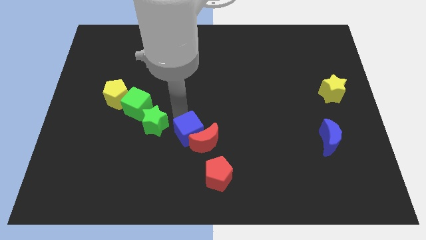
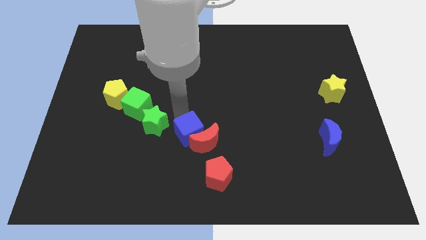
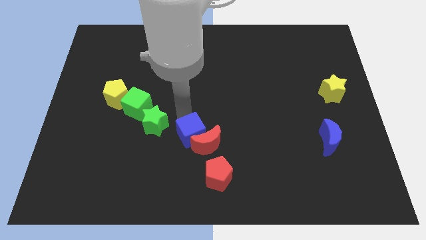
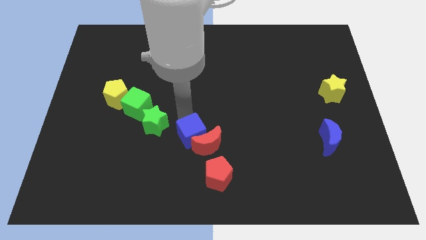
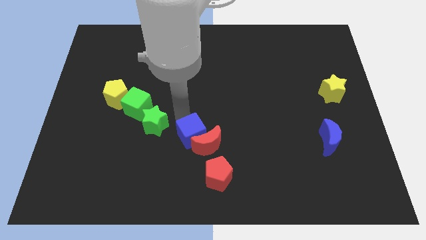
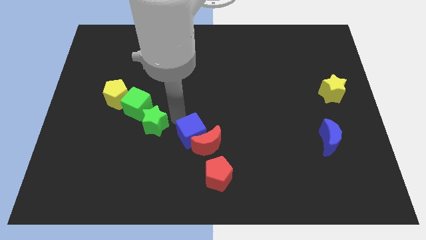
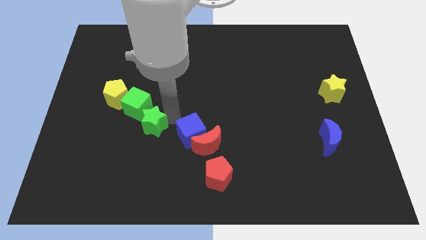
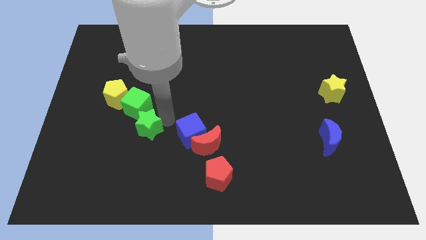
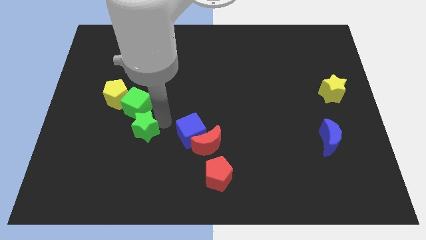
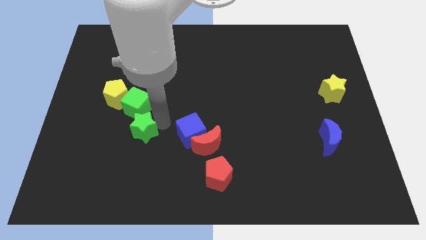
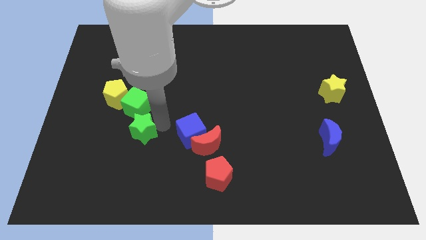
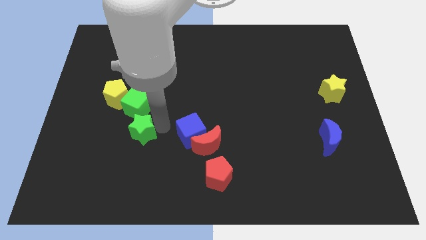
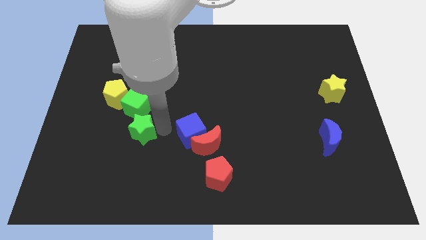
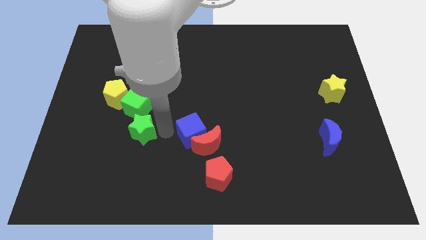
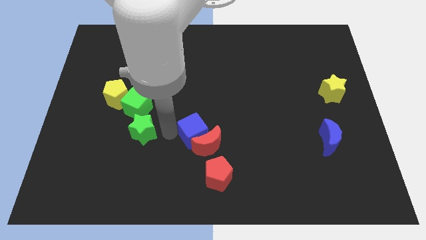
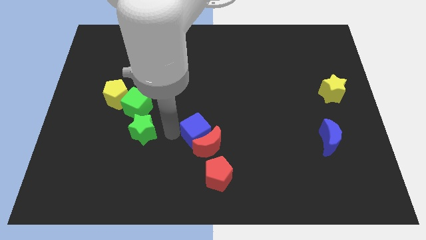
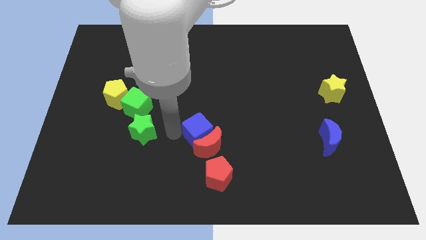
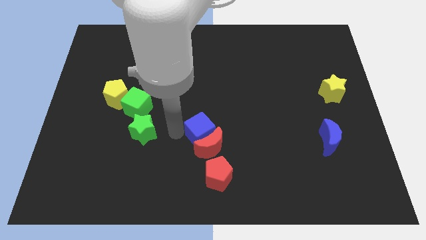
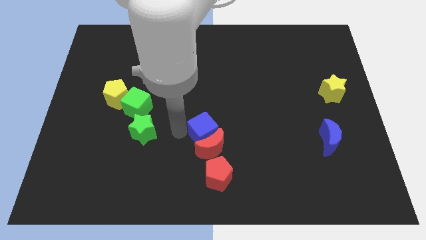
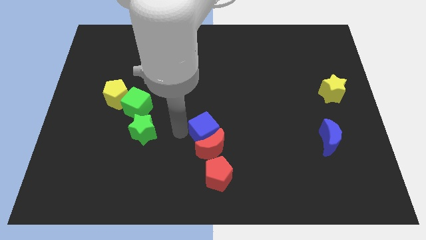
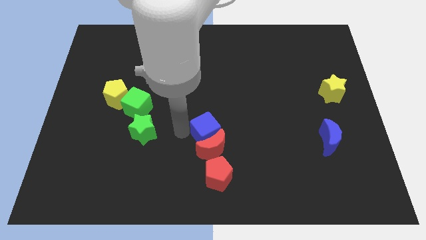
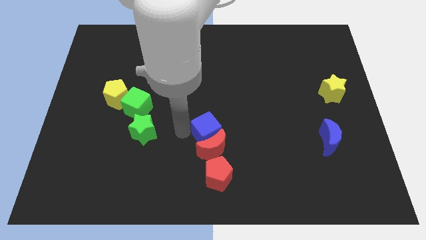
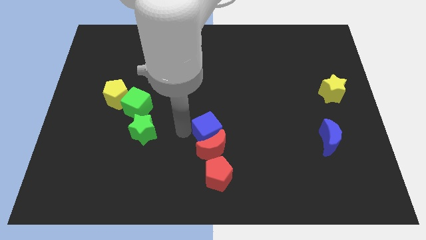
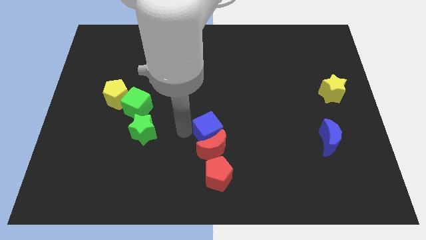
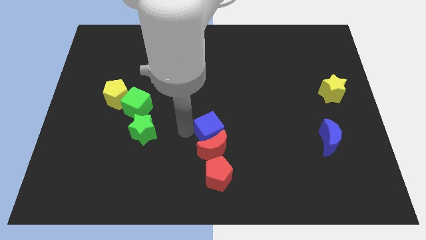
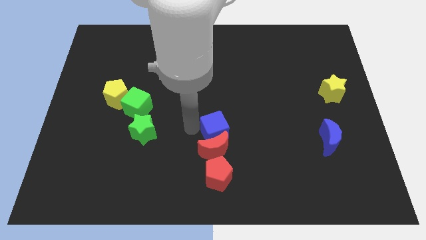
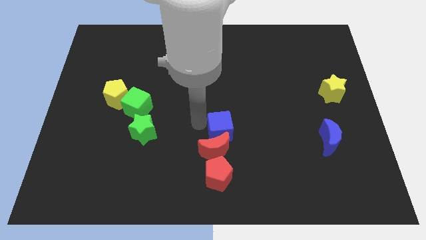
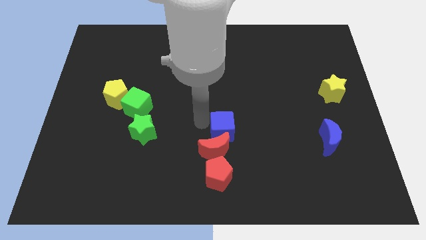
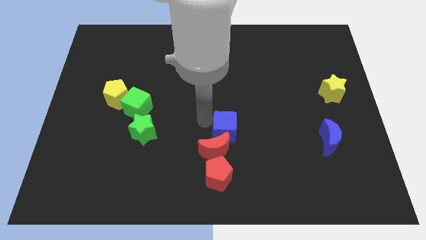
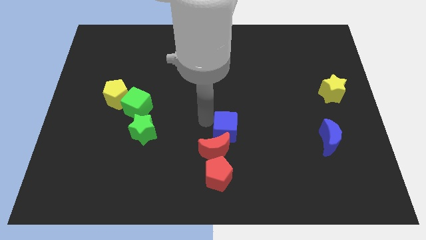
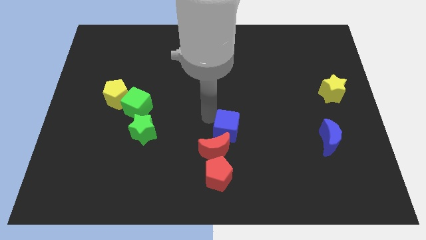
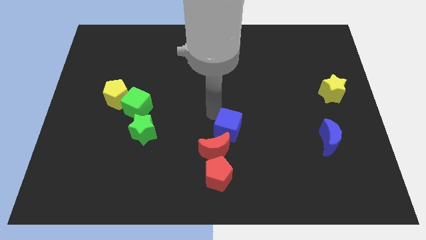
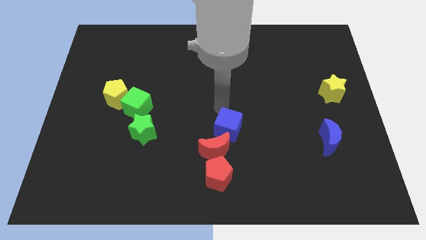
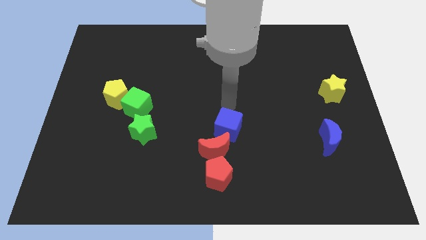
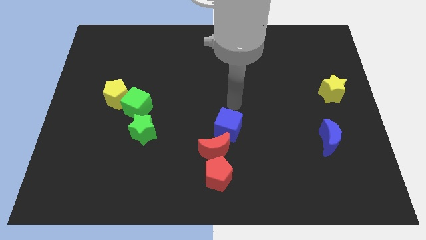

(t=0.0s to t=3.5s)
place blue cube to the top of the red moon

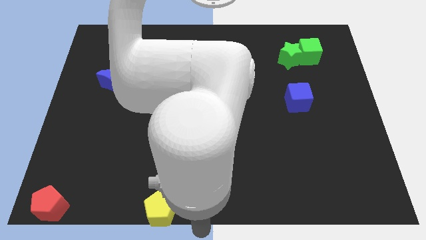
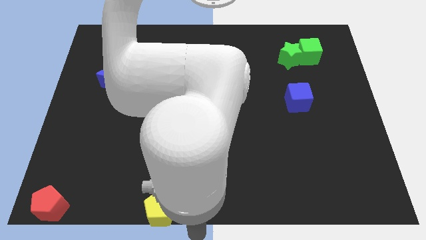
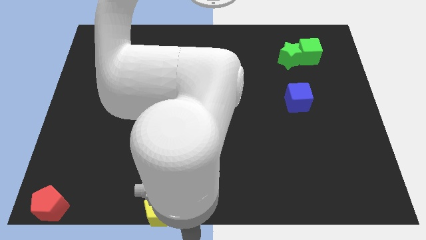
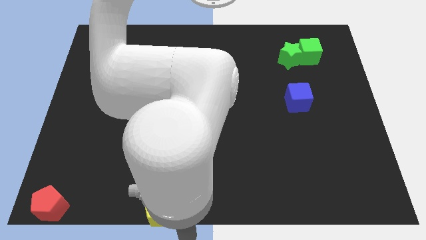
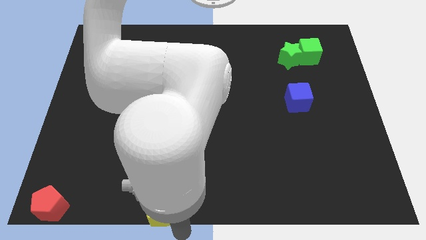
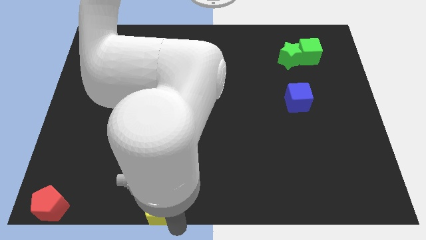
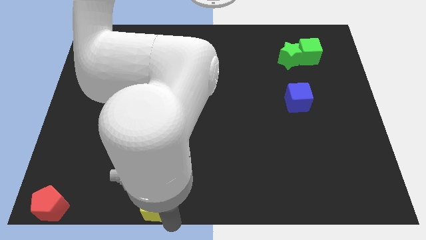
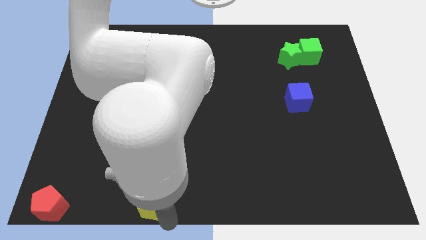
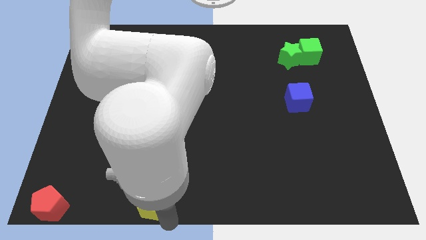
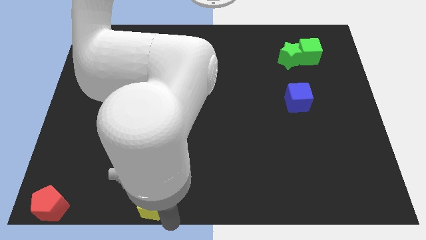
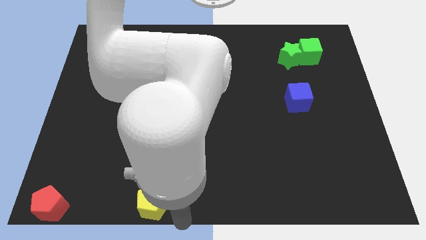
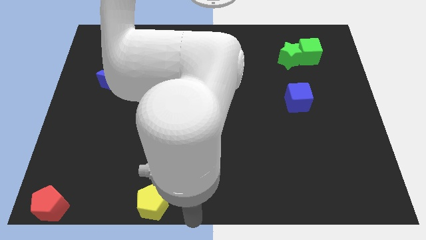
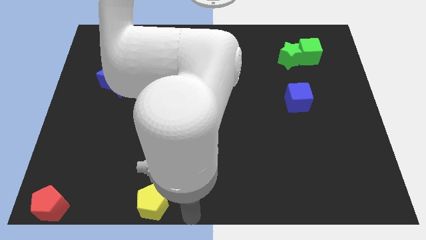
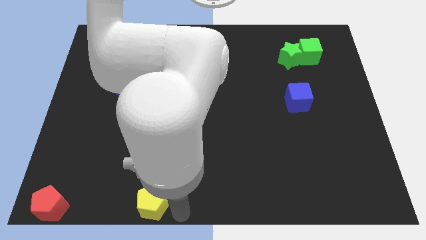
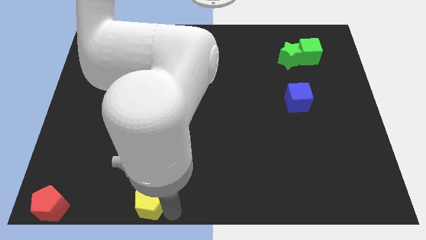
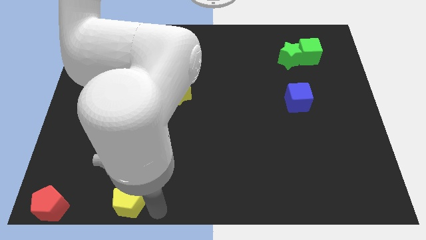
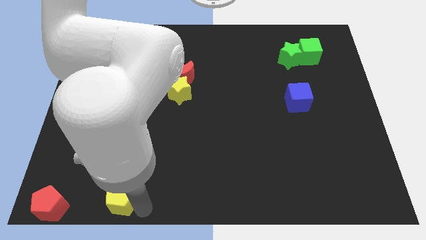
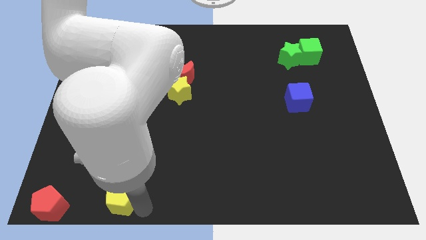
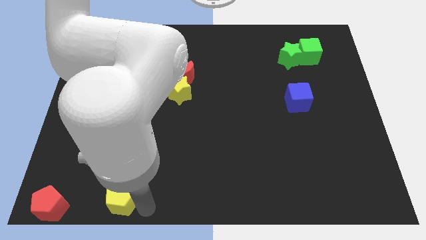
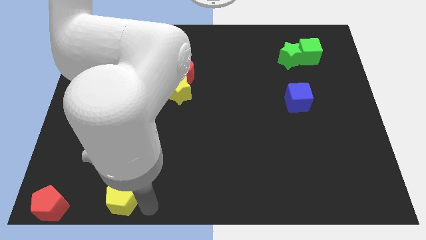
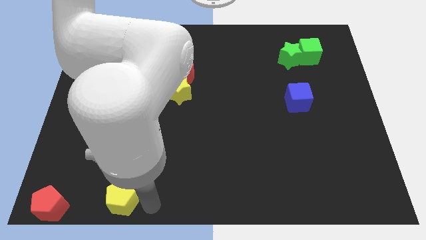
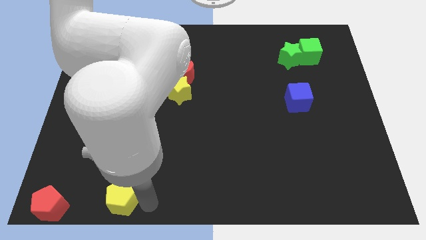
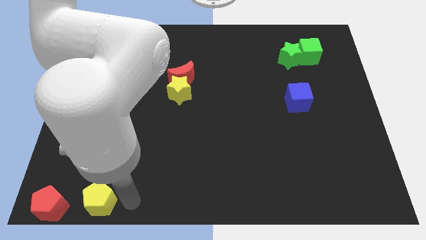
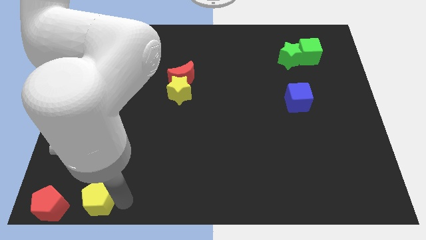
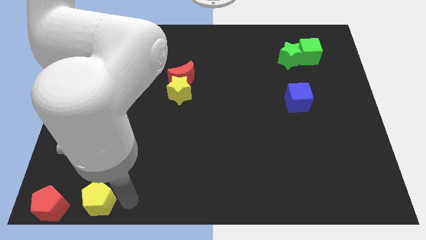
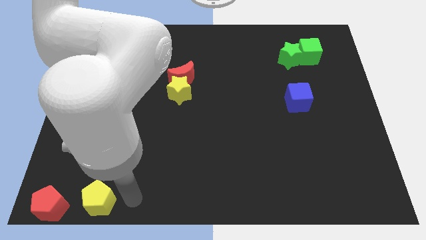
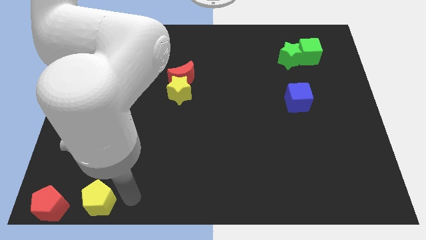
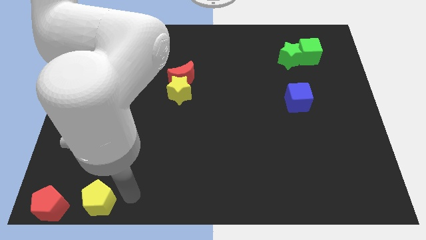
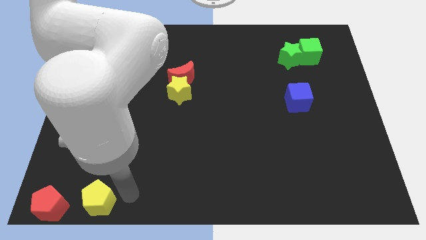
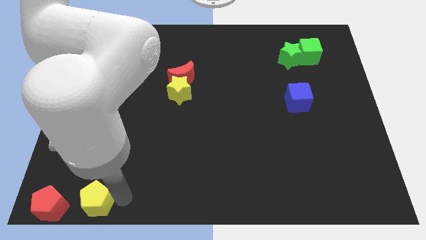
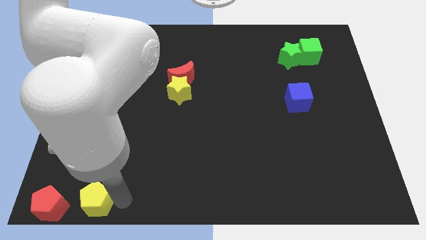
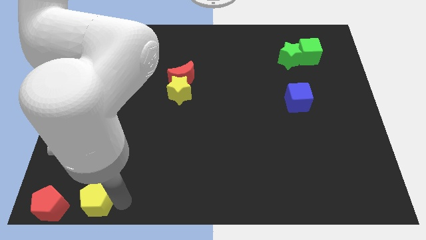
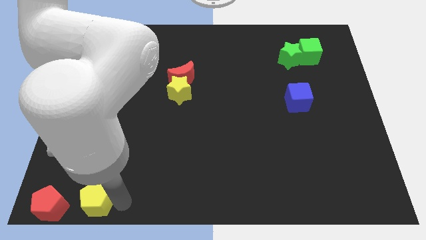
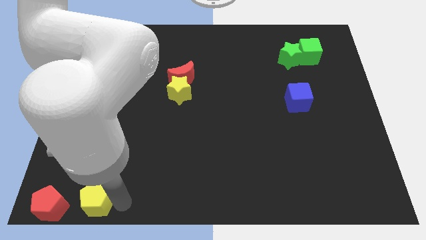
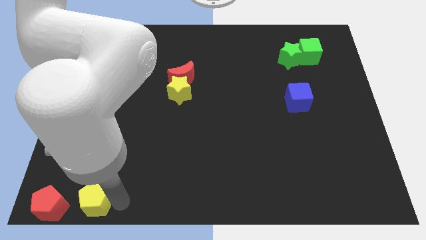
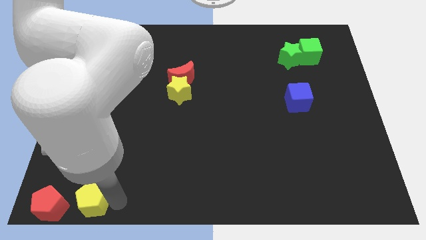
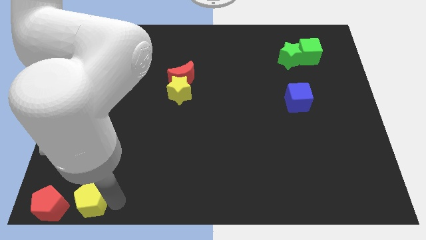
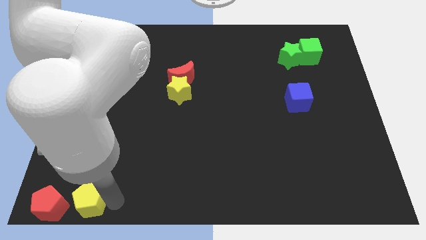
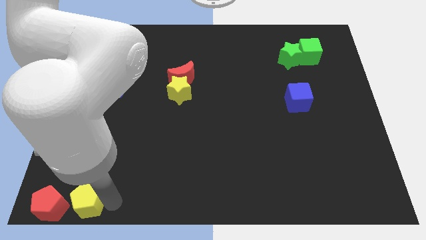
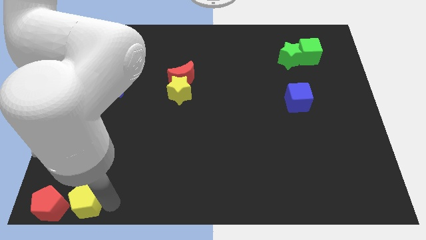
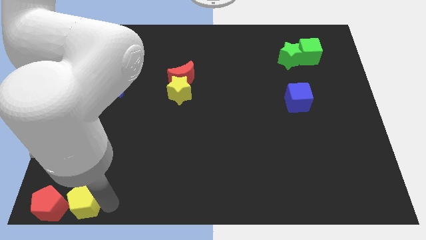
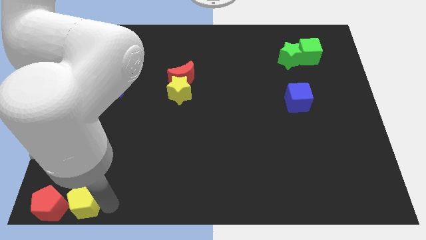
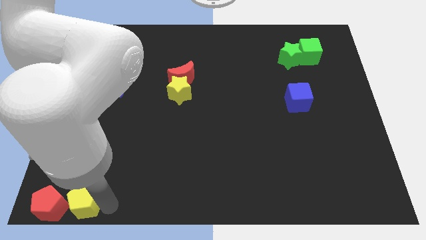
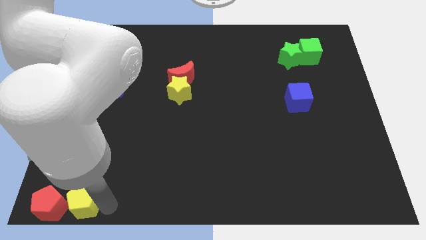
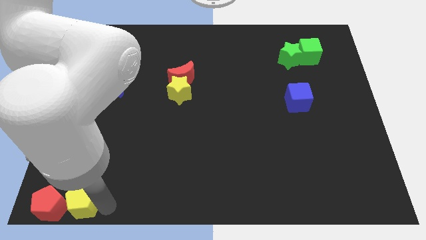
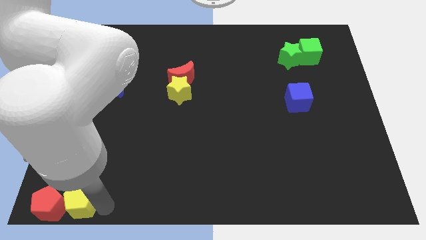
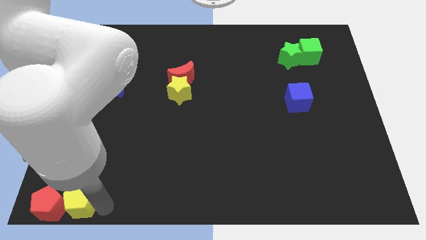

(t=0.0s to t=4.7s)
place the yellow pentagon right to the red pentagon

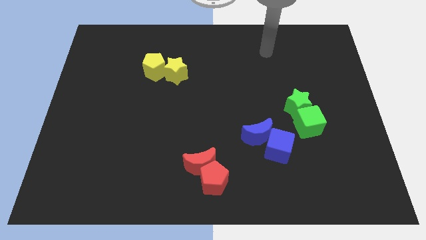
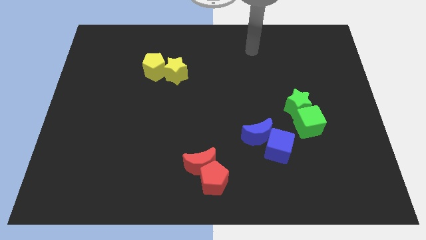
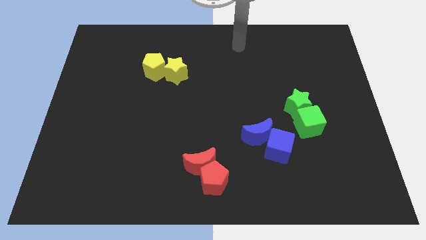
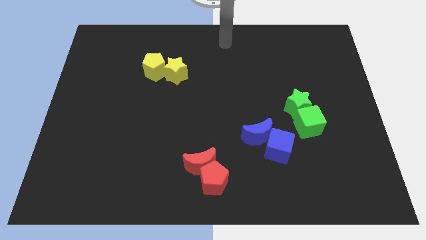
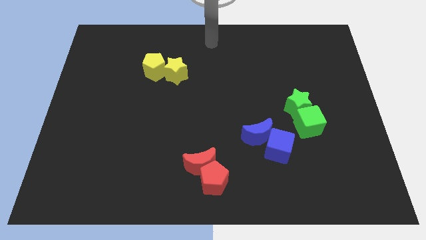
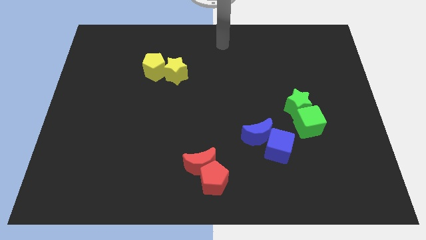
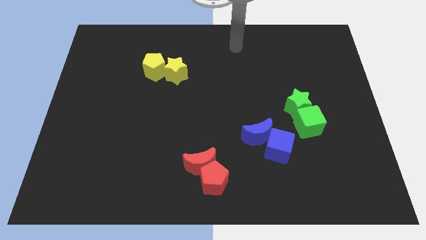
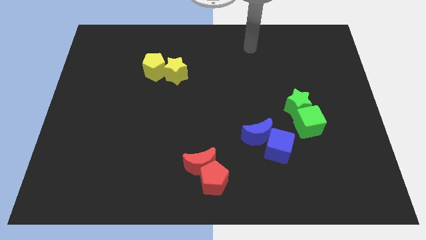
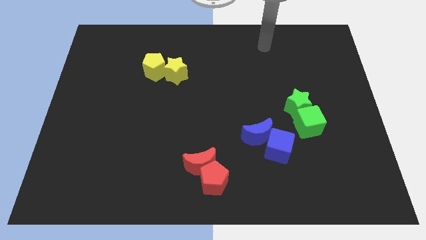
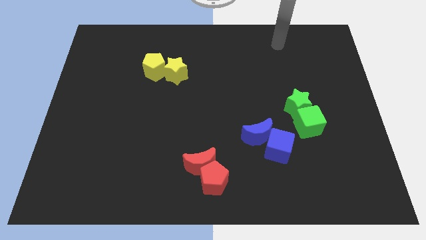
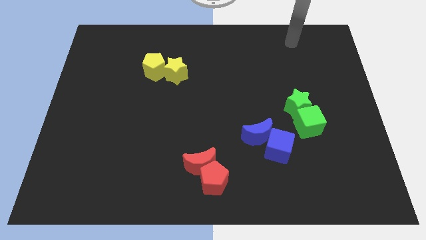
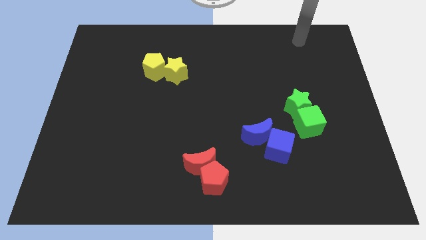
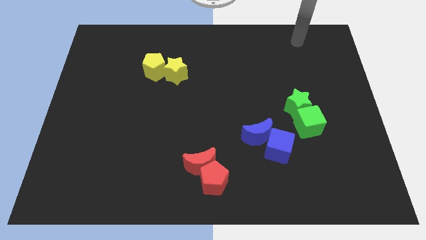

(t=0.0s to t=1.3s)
move arm towards top right side of the board
